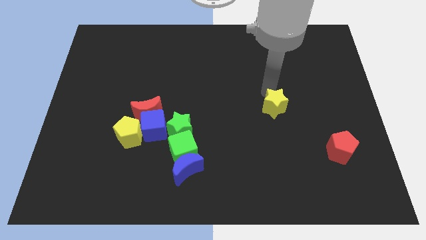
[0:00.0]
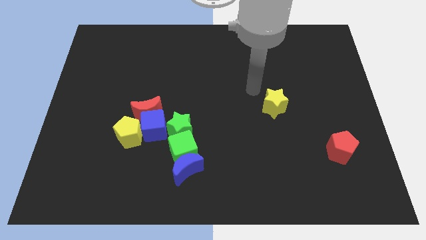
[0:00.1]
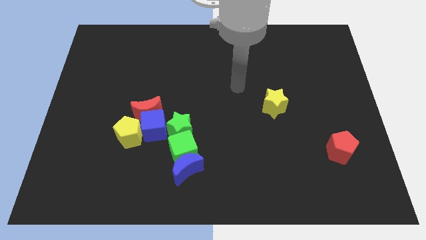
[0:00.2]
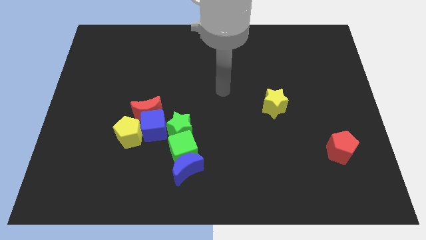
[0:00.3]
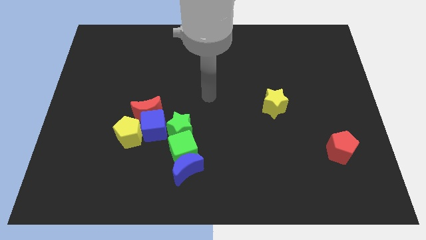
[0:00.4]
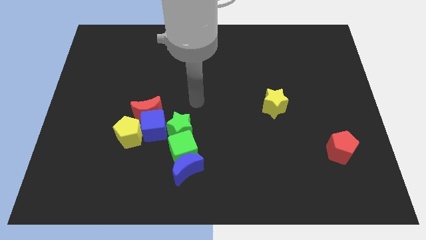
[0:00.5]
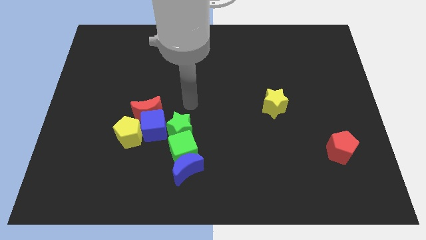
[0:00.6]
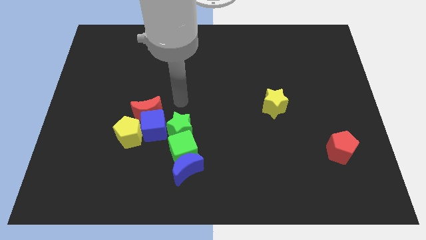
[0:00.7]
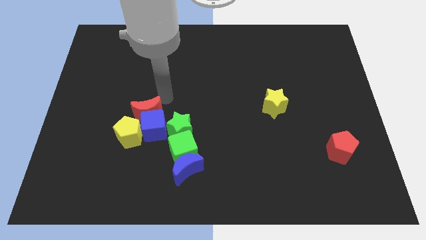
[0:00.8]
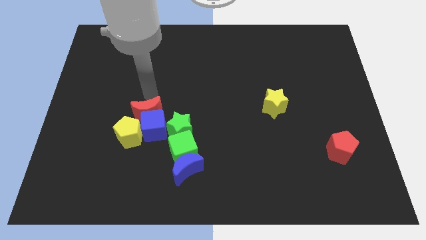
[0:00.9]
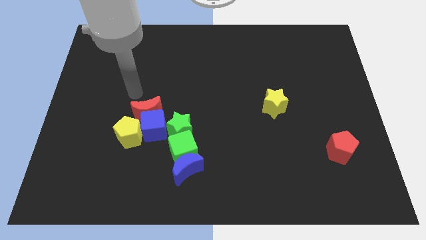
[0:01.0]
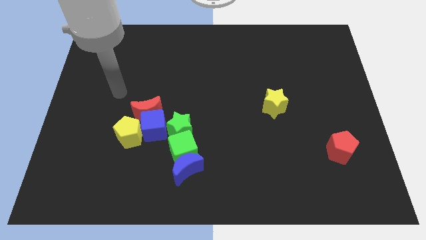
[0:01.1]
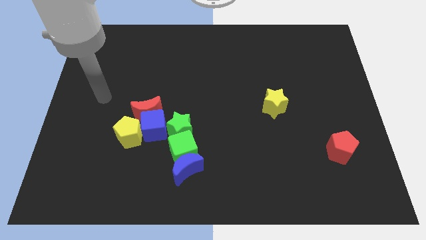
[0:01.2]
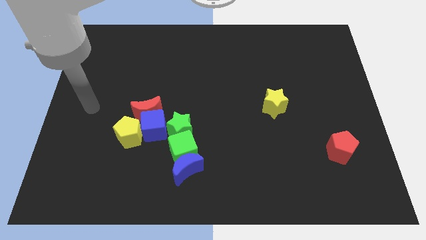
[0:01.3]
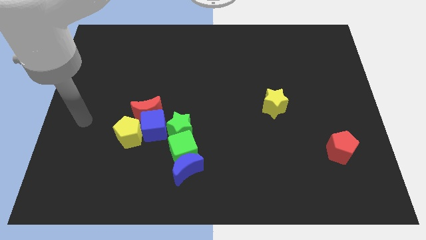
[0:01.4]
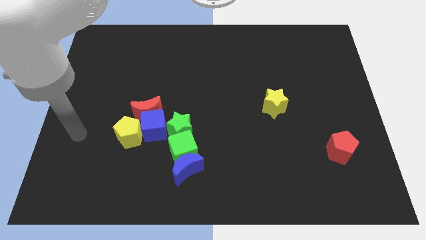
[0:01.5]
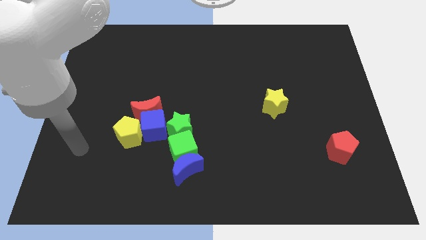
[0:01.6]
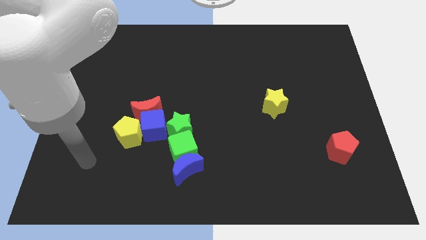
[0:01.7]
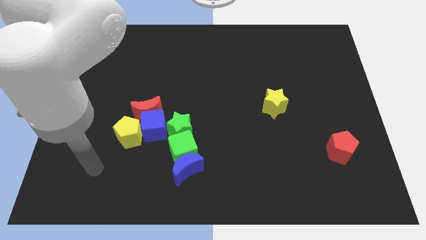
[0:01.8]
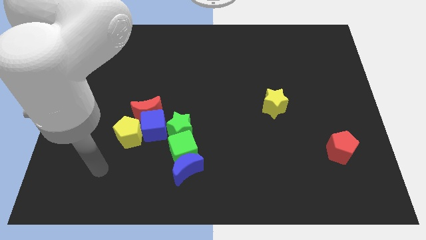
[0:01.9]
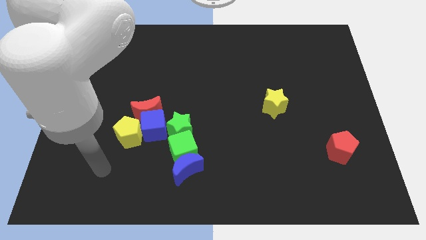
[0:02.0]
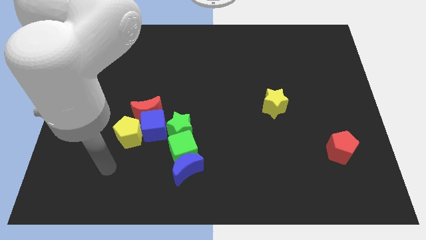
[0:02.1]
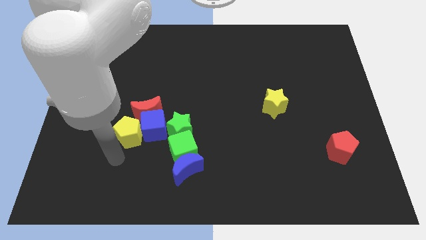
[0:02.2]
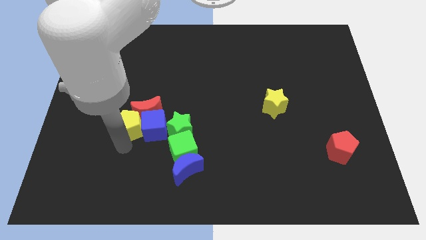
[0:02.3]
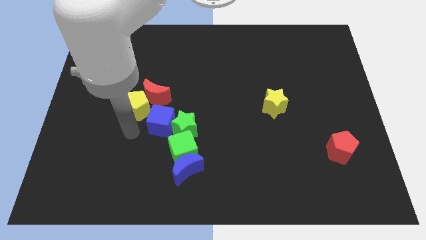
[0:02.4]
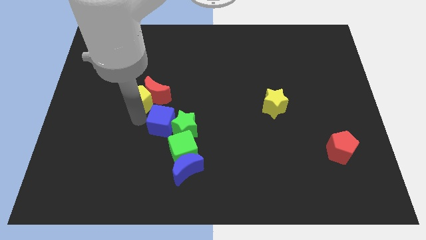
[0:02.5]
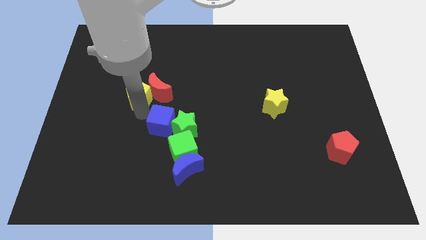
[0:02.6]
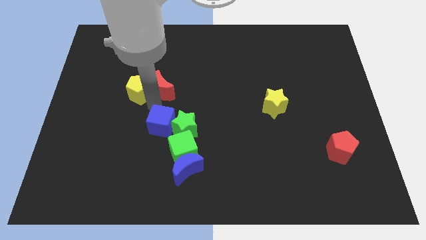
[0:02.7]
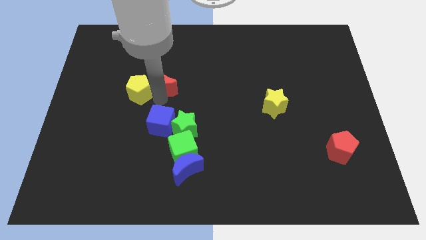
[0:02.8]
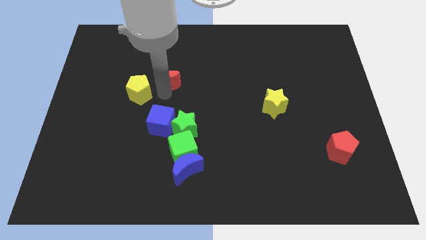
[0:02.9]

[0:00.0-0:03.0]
move the yellow pentagon and red crescent up slightly

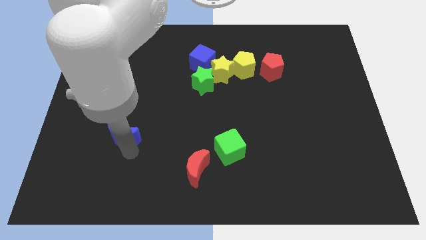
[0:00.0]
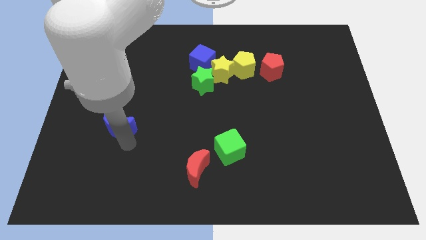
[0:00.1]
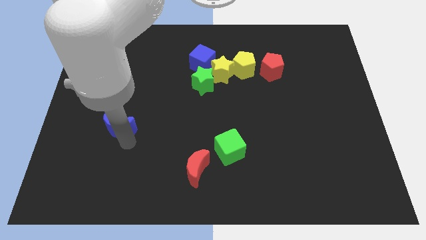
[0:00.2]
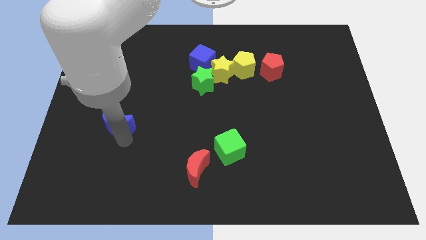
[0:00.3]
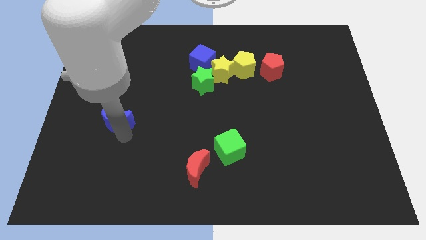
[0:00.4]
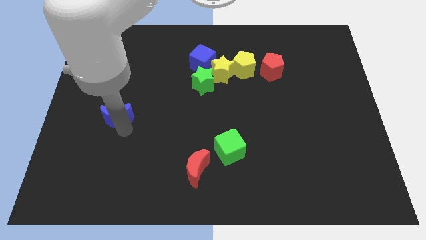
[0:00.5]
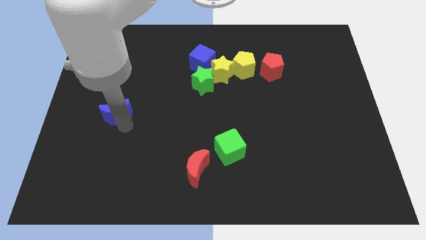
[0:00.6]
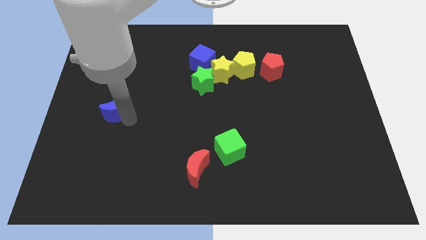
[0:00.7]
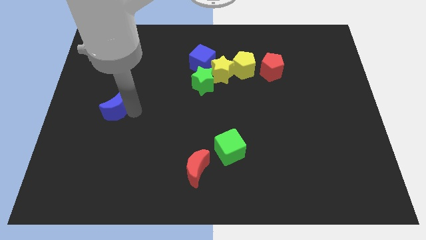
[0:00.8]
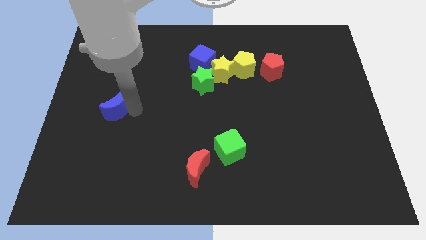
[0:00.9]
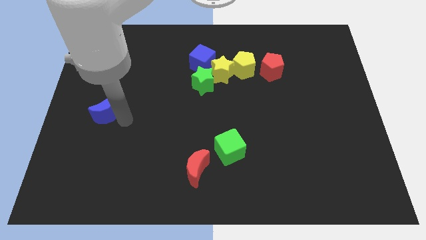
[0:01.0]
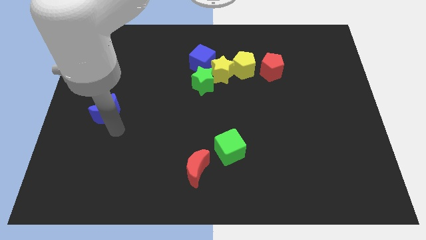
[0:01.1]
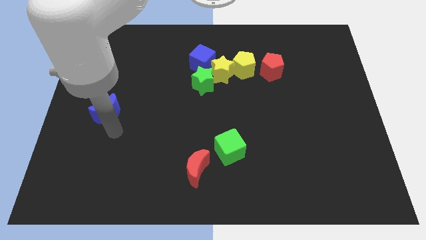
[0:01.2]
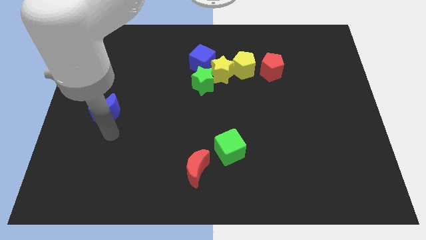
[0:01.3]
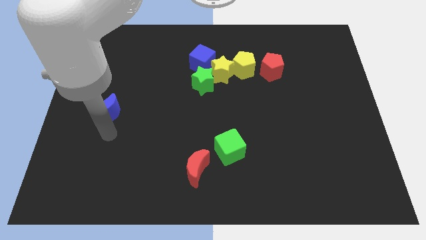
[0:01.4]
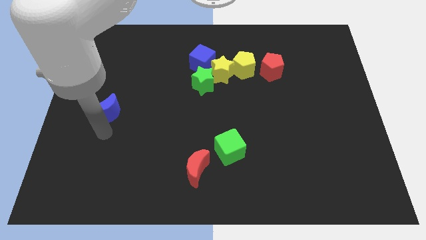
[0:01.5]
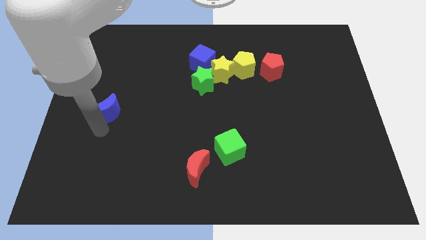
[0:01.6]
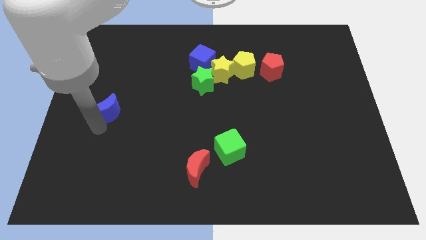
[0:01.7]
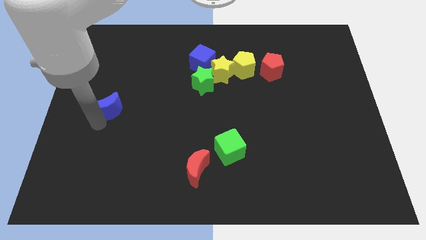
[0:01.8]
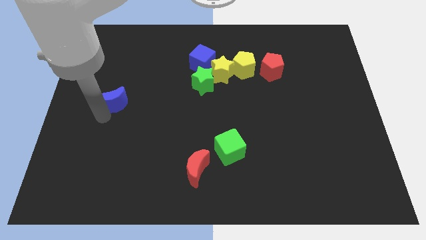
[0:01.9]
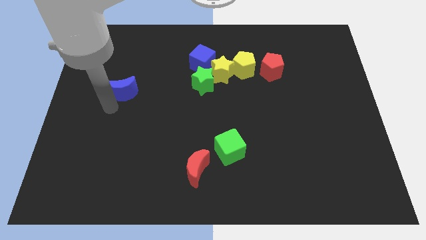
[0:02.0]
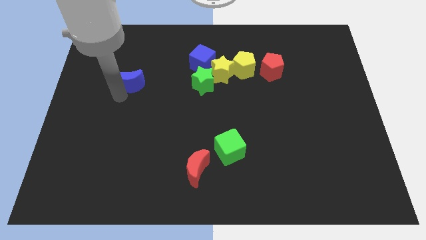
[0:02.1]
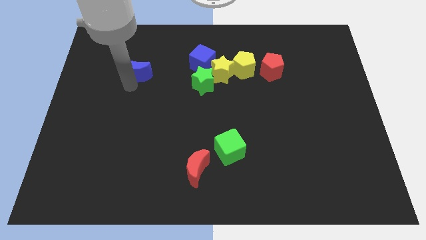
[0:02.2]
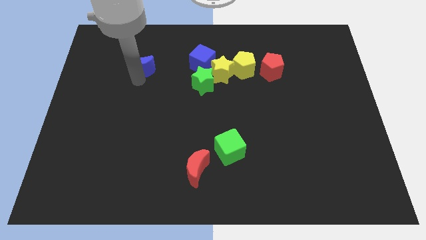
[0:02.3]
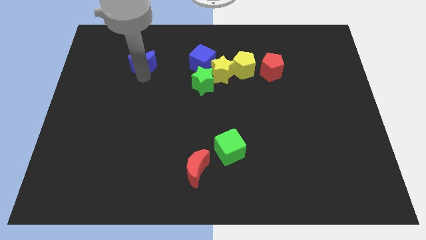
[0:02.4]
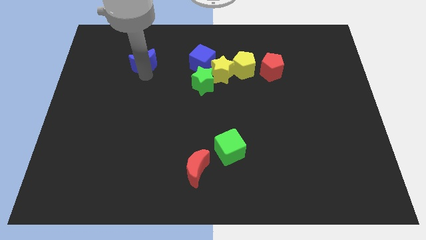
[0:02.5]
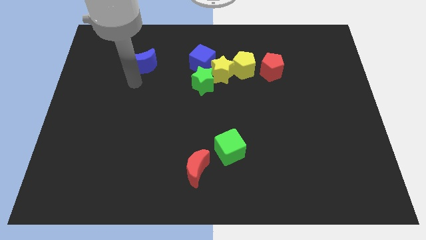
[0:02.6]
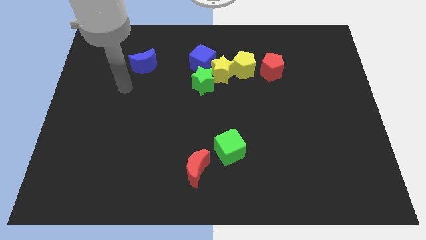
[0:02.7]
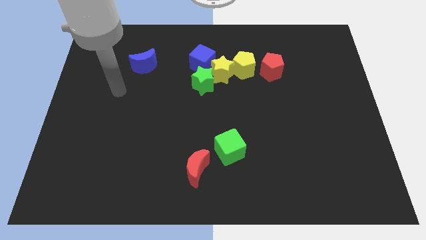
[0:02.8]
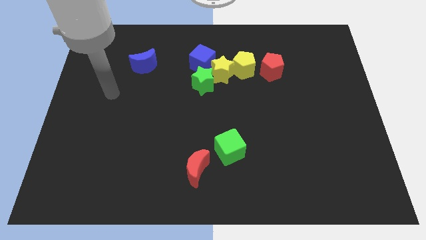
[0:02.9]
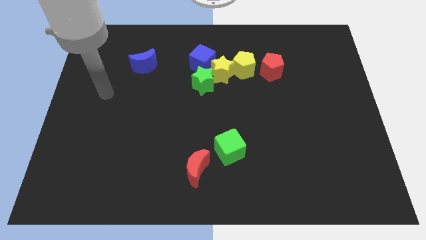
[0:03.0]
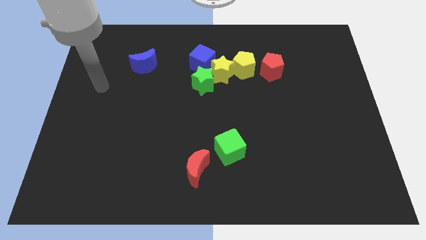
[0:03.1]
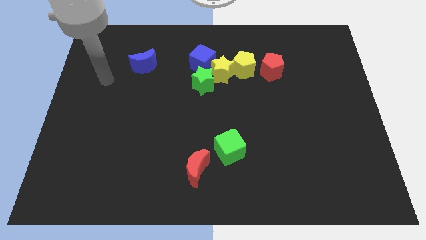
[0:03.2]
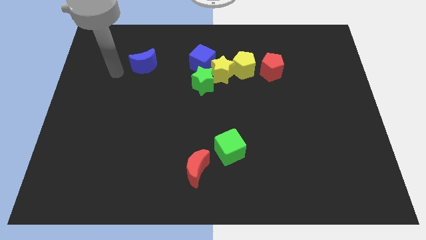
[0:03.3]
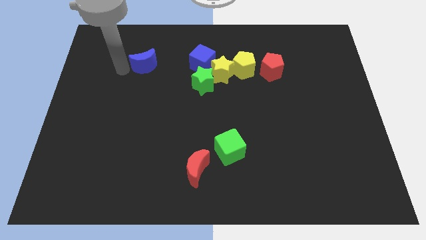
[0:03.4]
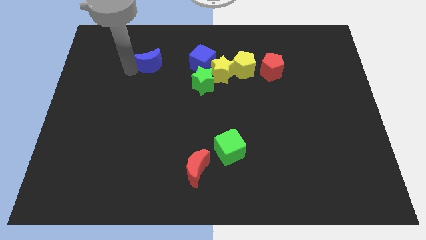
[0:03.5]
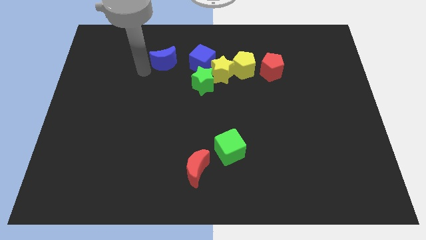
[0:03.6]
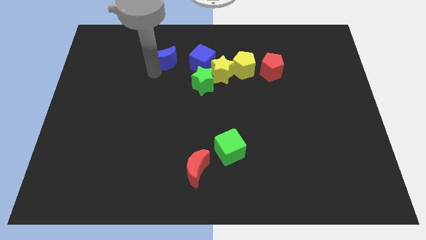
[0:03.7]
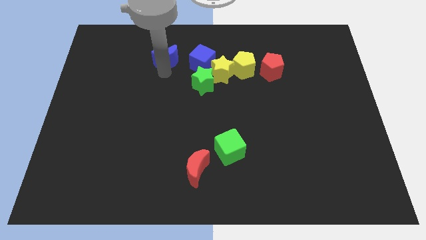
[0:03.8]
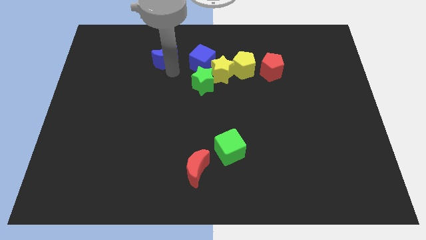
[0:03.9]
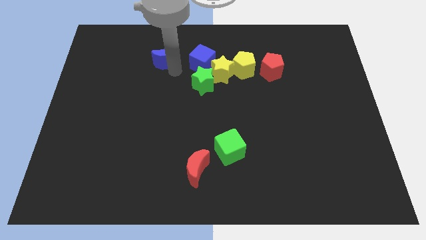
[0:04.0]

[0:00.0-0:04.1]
move the blue crescent towards the left side of the blue cube

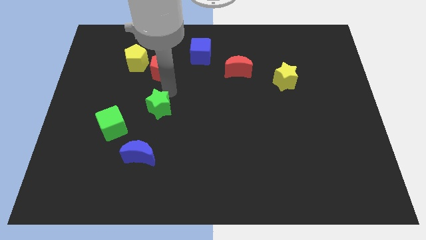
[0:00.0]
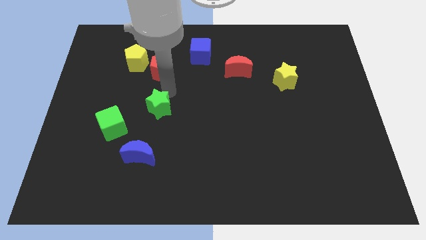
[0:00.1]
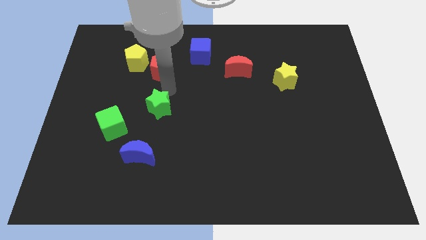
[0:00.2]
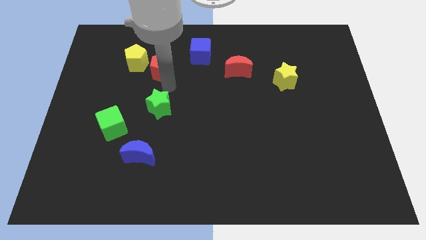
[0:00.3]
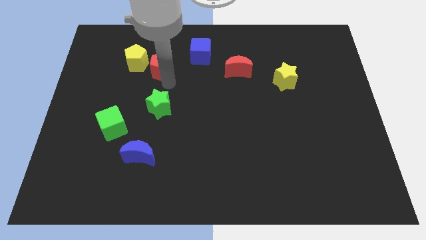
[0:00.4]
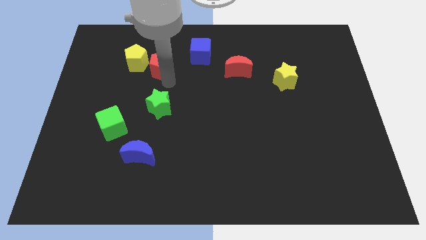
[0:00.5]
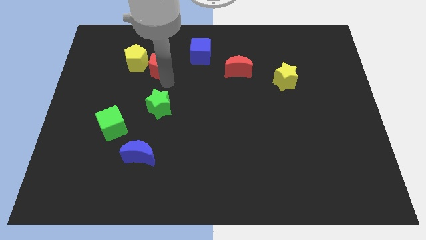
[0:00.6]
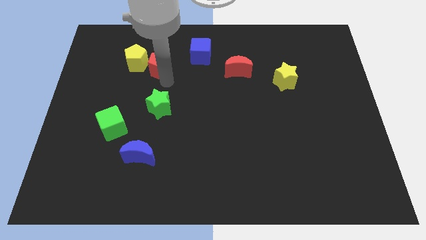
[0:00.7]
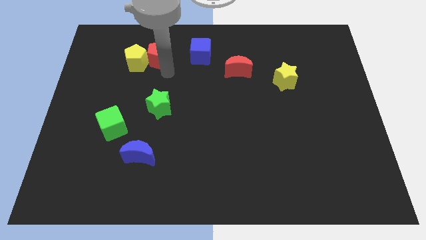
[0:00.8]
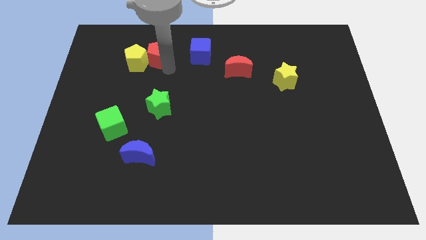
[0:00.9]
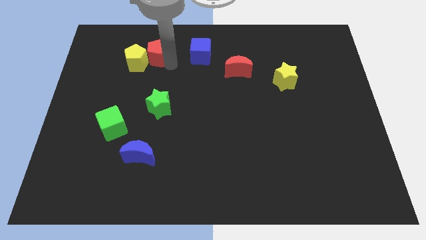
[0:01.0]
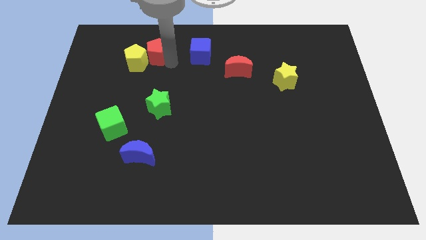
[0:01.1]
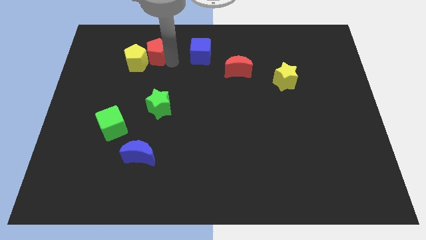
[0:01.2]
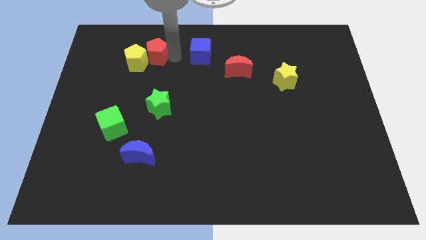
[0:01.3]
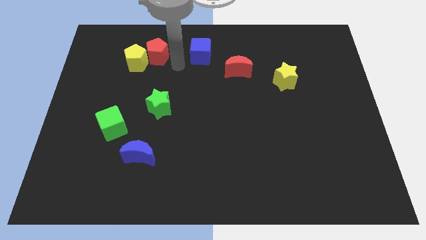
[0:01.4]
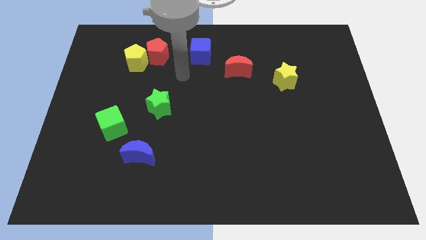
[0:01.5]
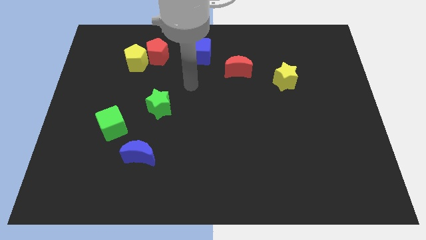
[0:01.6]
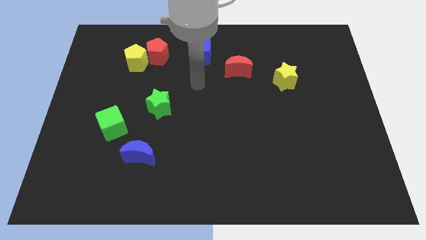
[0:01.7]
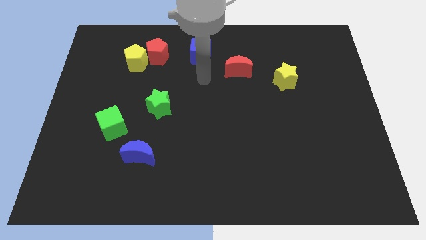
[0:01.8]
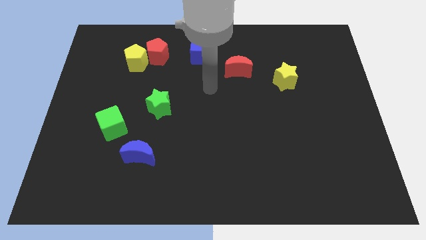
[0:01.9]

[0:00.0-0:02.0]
push the red pentagon slightly to the left of blue cube
